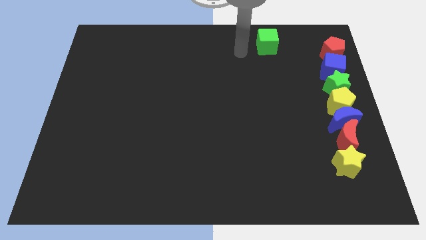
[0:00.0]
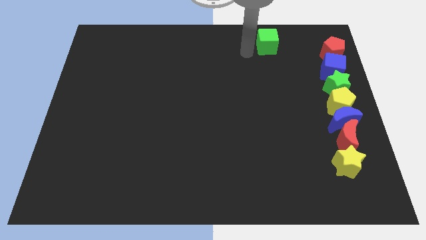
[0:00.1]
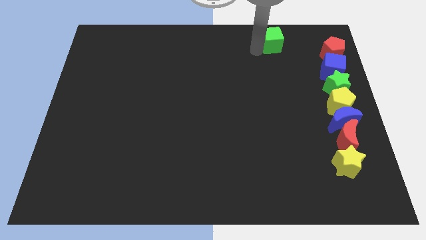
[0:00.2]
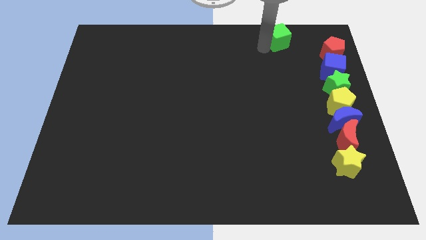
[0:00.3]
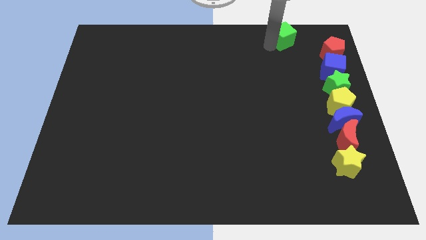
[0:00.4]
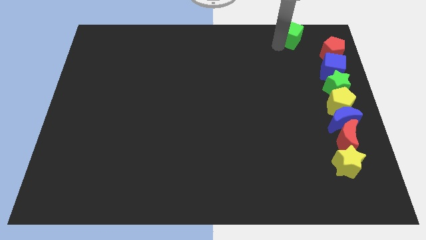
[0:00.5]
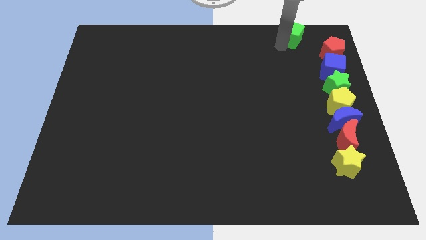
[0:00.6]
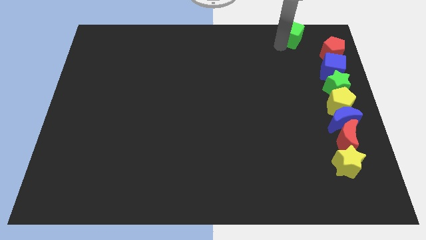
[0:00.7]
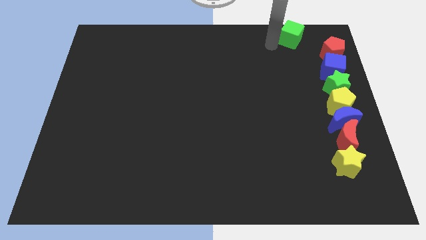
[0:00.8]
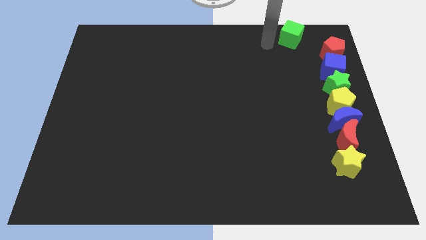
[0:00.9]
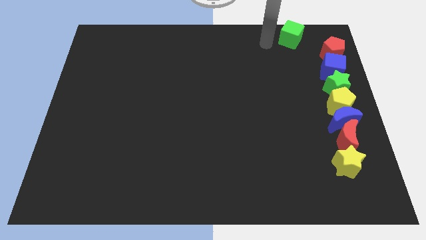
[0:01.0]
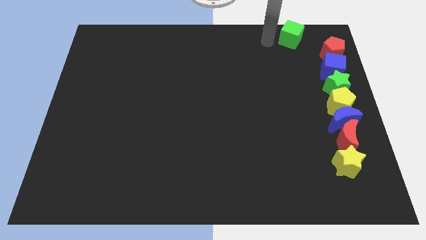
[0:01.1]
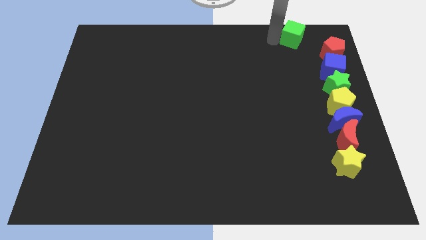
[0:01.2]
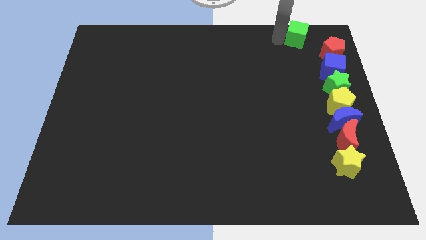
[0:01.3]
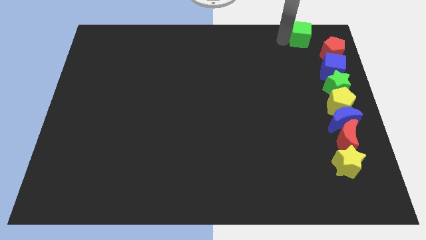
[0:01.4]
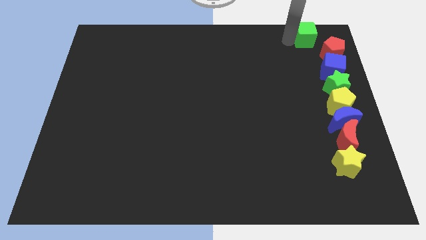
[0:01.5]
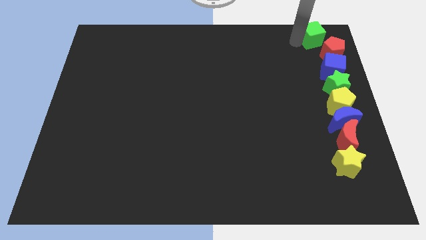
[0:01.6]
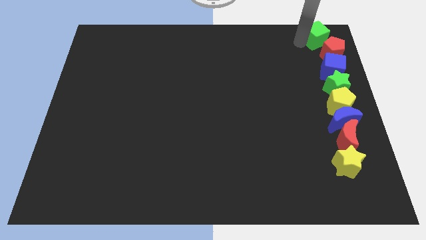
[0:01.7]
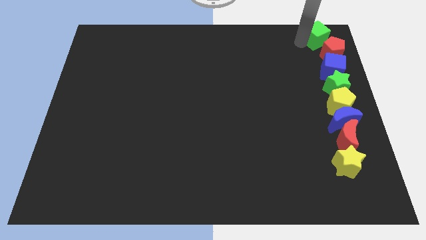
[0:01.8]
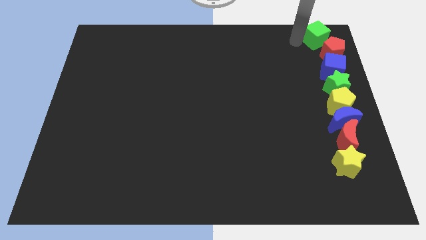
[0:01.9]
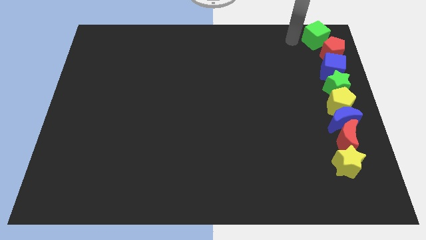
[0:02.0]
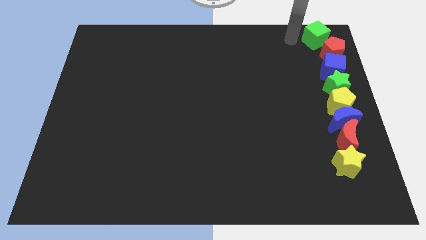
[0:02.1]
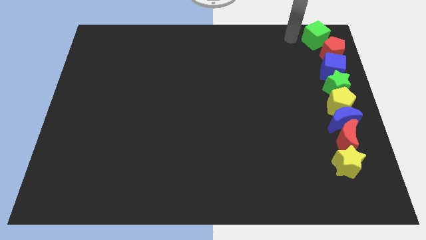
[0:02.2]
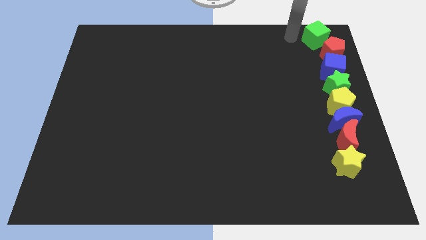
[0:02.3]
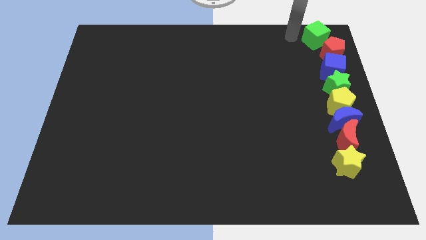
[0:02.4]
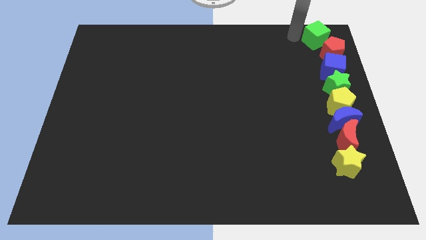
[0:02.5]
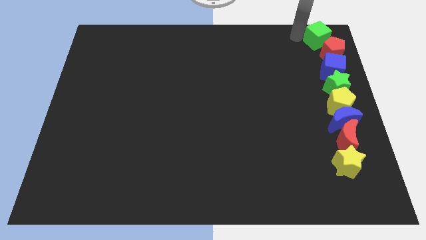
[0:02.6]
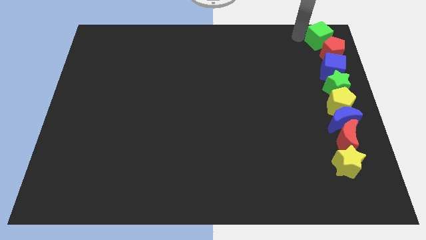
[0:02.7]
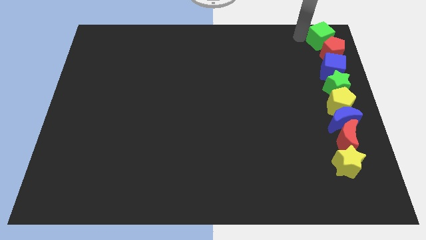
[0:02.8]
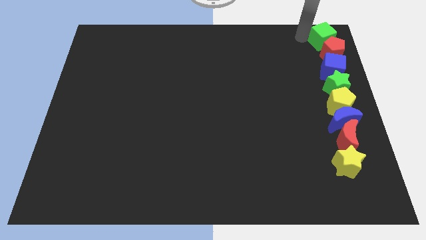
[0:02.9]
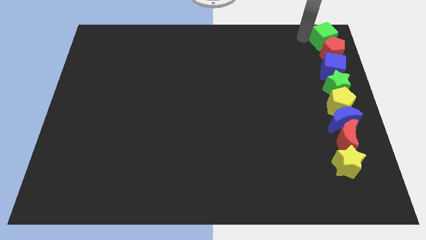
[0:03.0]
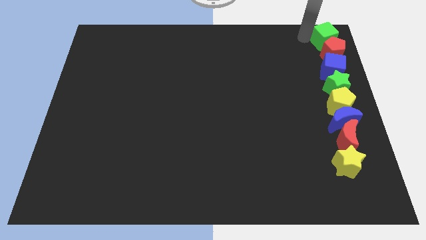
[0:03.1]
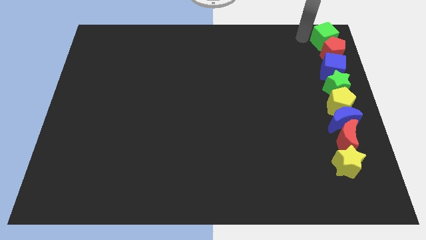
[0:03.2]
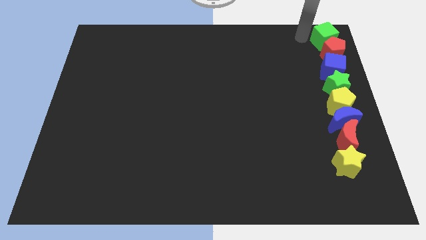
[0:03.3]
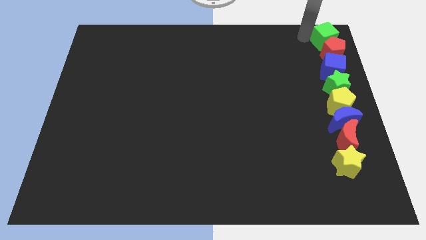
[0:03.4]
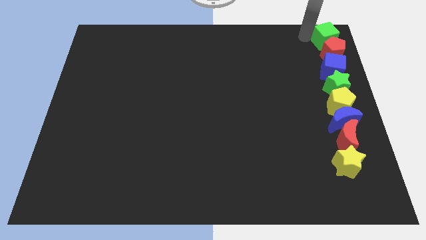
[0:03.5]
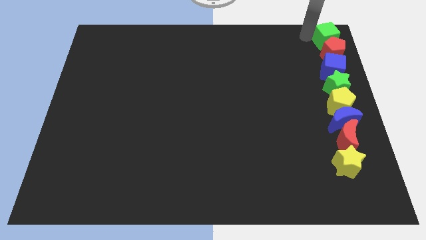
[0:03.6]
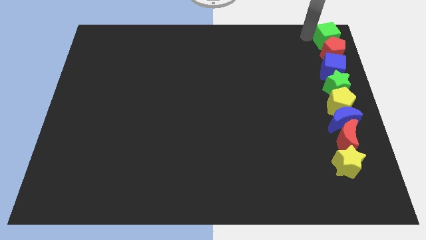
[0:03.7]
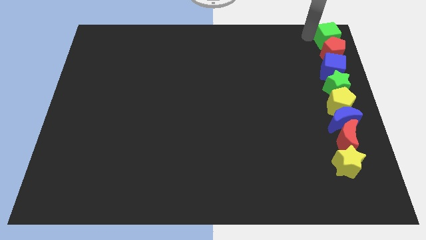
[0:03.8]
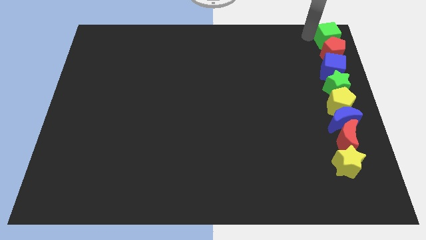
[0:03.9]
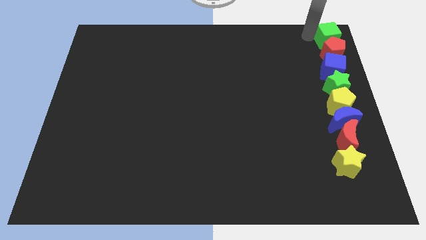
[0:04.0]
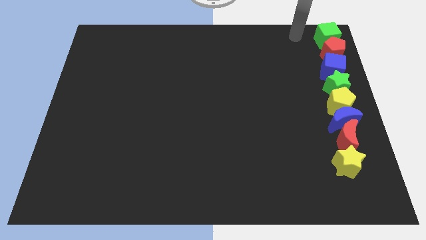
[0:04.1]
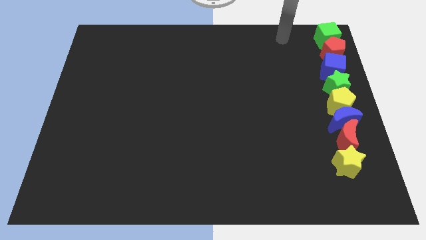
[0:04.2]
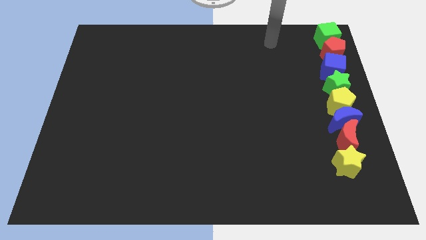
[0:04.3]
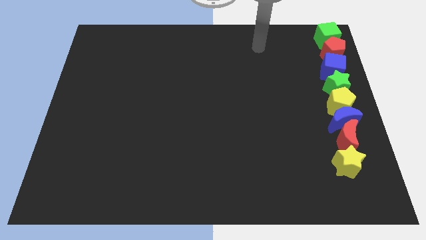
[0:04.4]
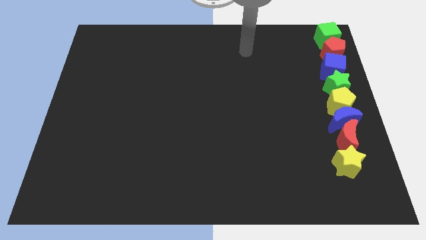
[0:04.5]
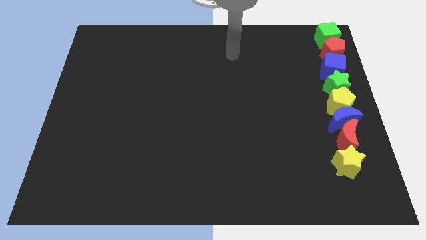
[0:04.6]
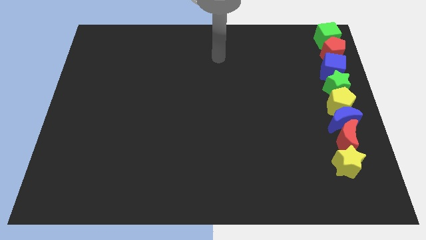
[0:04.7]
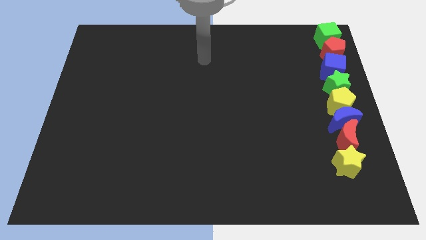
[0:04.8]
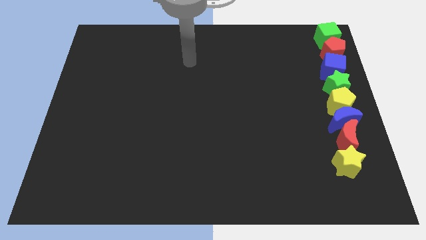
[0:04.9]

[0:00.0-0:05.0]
place the green cube above the red pentagon

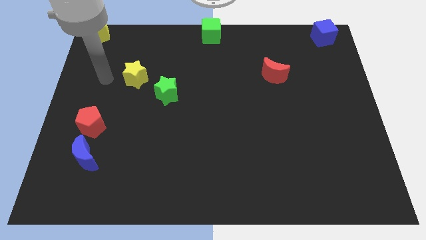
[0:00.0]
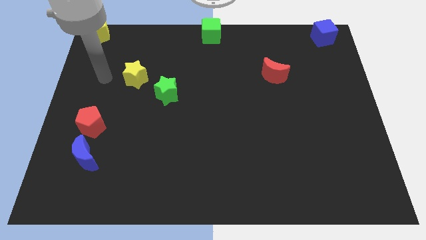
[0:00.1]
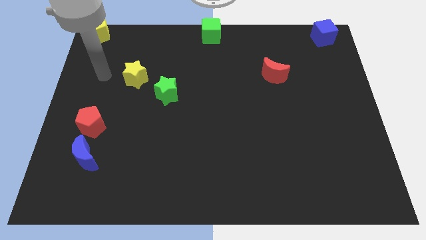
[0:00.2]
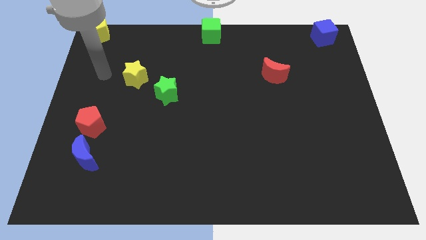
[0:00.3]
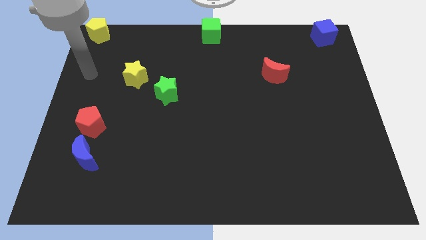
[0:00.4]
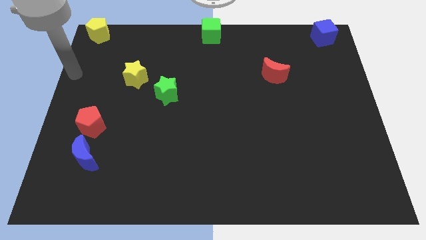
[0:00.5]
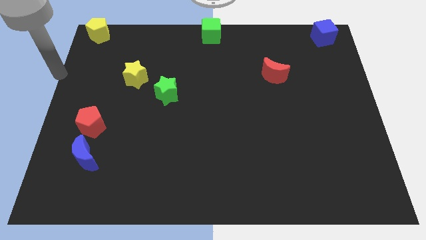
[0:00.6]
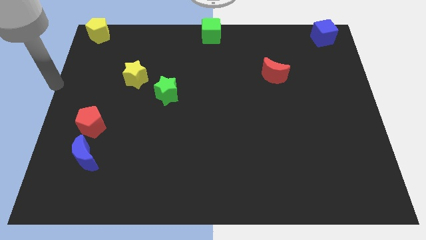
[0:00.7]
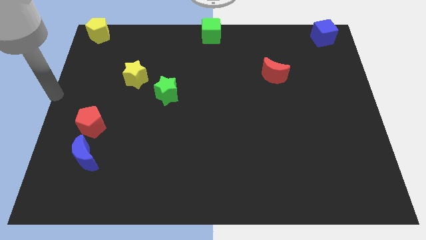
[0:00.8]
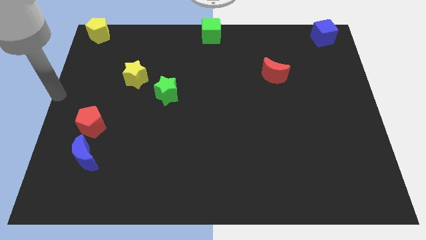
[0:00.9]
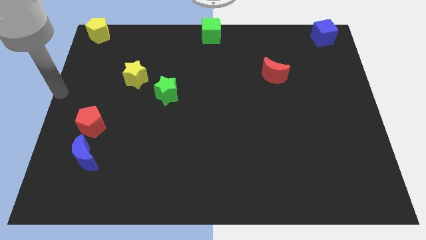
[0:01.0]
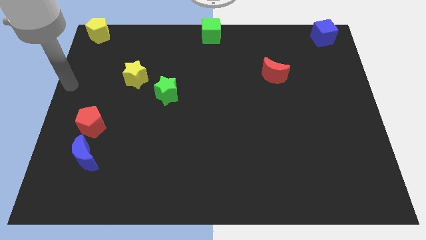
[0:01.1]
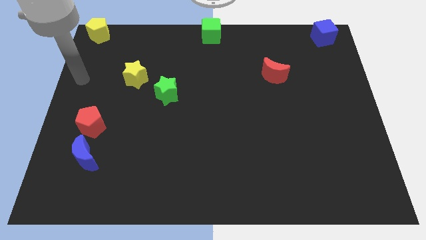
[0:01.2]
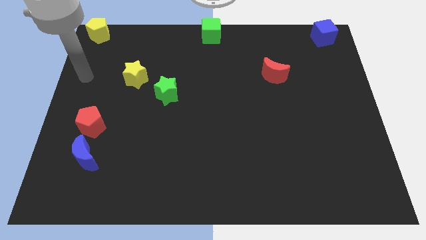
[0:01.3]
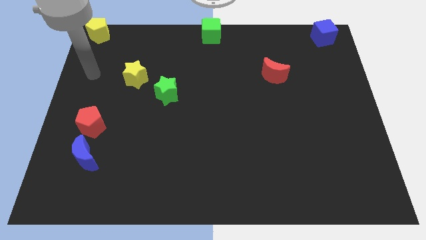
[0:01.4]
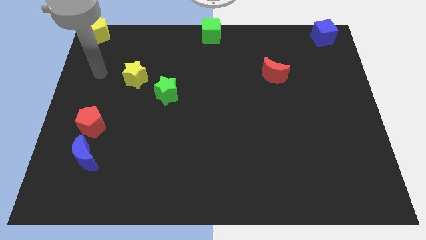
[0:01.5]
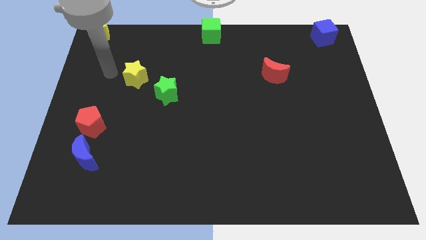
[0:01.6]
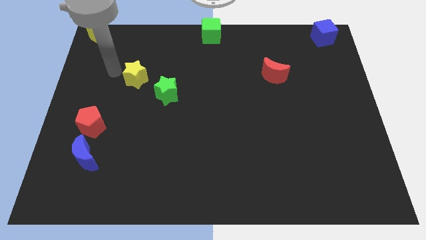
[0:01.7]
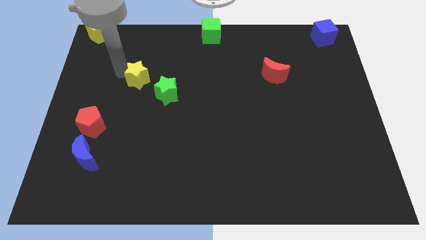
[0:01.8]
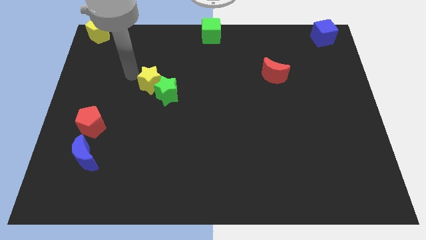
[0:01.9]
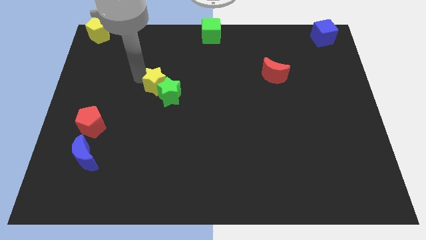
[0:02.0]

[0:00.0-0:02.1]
push the yellow star into the green star

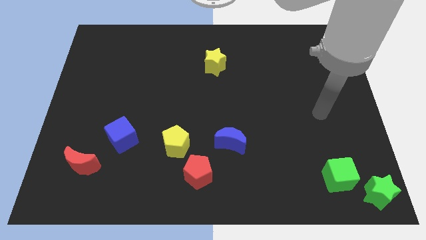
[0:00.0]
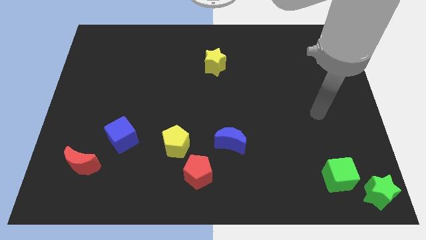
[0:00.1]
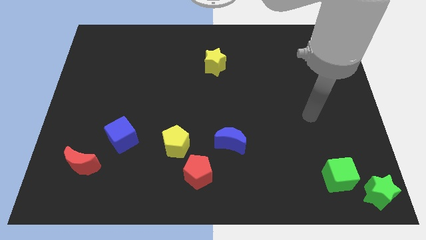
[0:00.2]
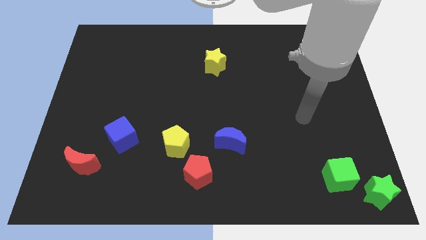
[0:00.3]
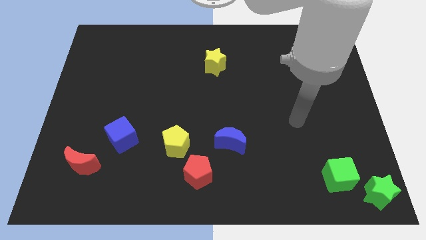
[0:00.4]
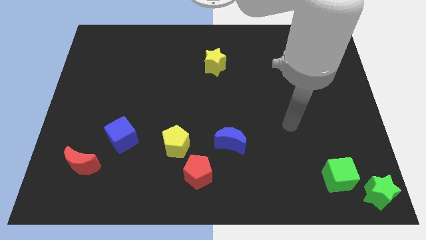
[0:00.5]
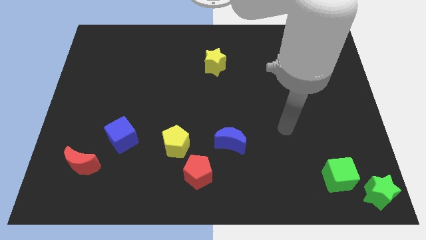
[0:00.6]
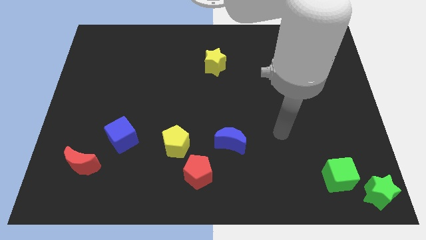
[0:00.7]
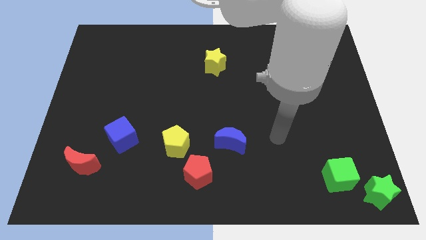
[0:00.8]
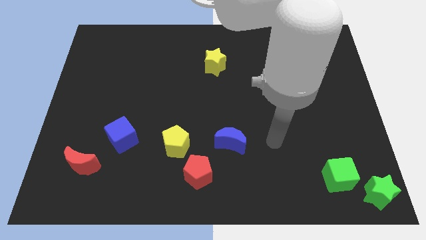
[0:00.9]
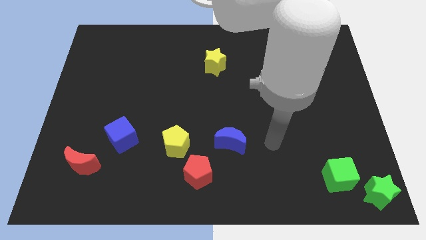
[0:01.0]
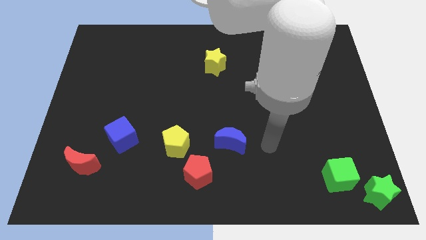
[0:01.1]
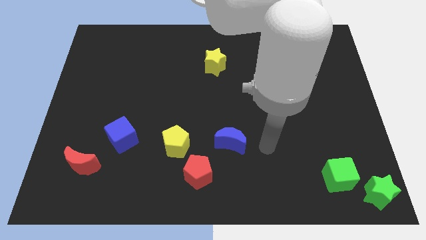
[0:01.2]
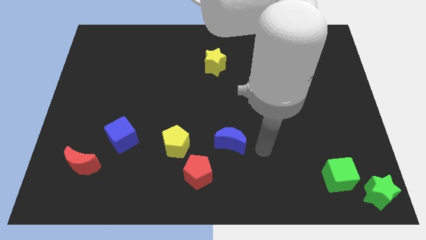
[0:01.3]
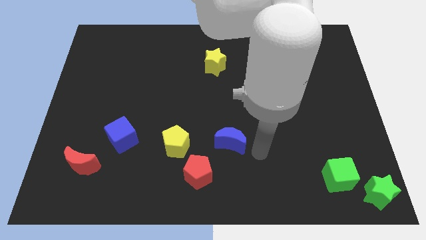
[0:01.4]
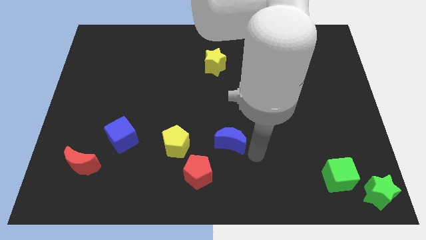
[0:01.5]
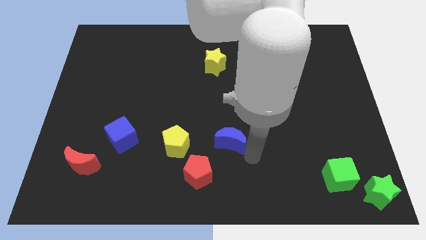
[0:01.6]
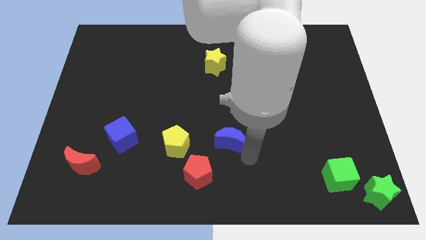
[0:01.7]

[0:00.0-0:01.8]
move your arm towards the right of blue crescent

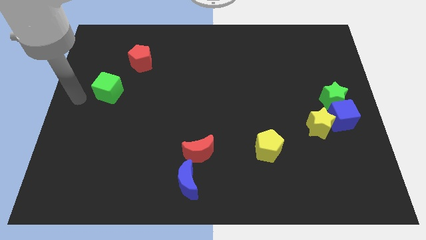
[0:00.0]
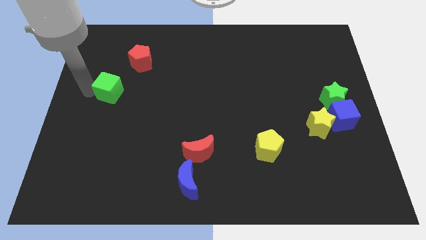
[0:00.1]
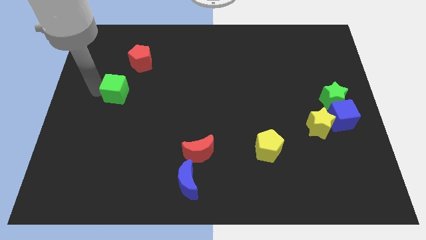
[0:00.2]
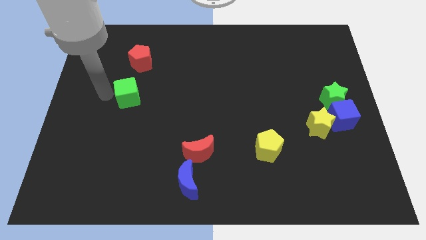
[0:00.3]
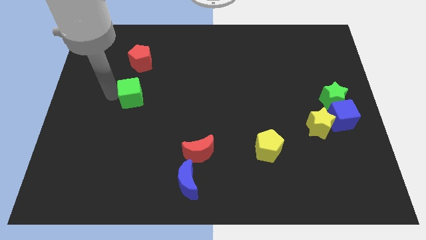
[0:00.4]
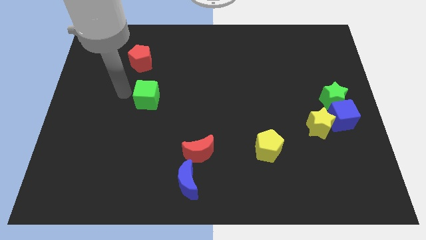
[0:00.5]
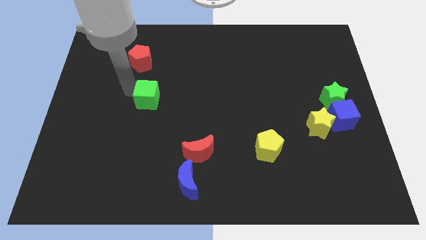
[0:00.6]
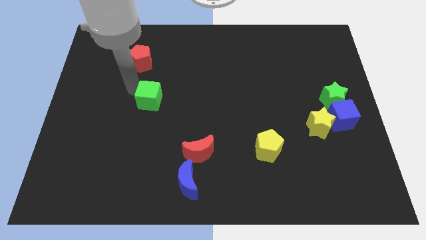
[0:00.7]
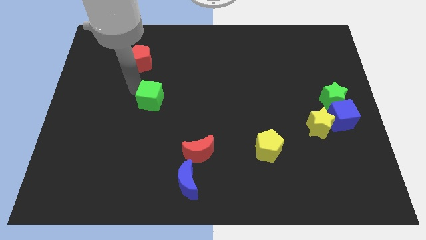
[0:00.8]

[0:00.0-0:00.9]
push the green cube towards the center of the board
